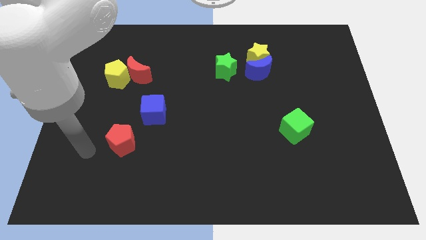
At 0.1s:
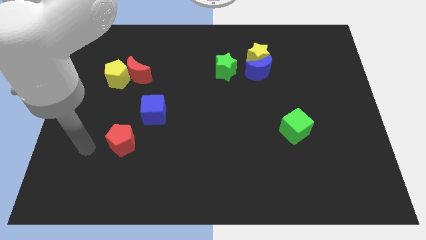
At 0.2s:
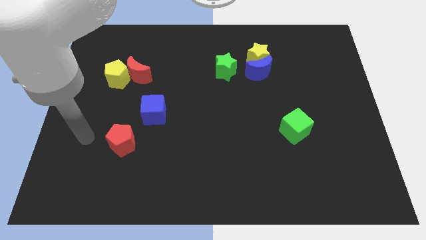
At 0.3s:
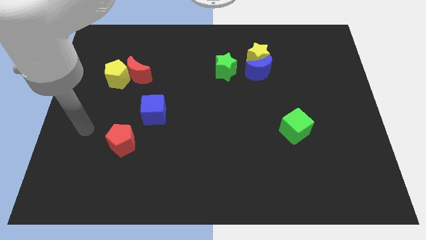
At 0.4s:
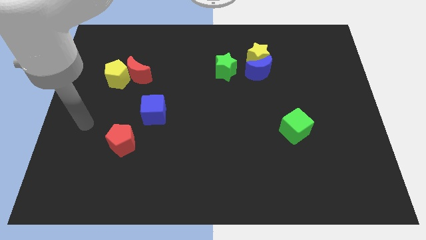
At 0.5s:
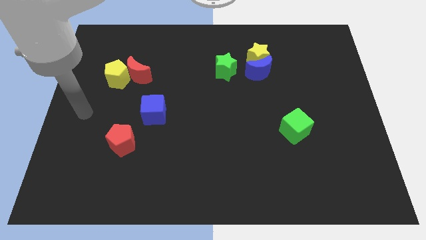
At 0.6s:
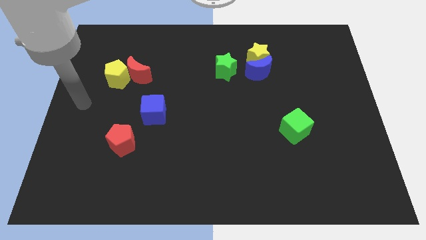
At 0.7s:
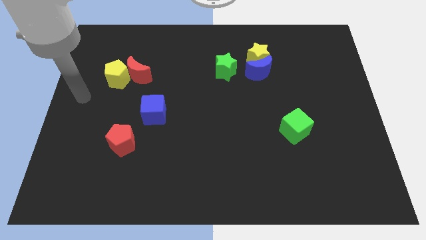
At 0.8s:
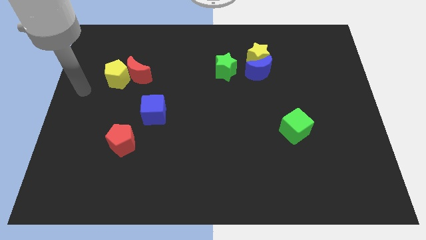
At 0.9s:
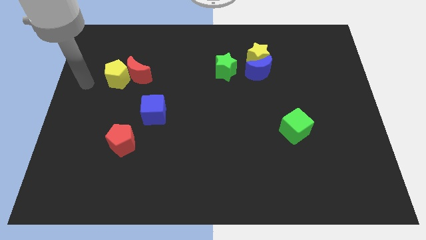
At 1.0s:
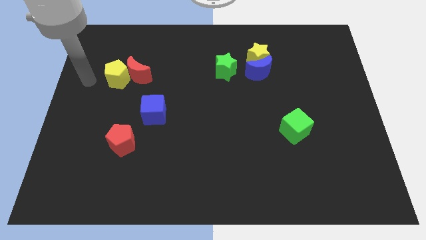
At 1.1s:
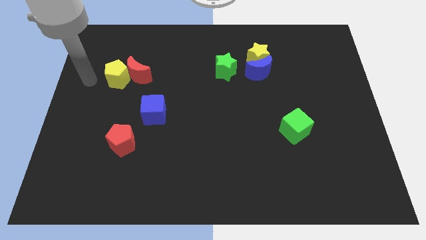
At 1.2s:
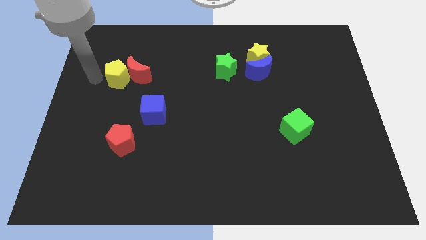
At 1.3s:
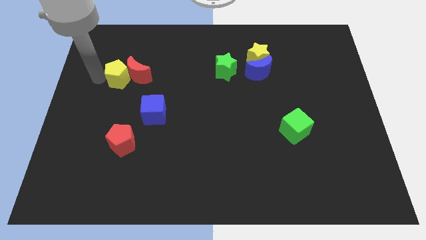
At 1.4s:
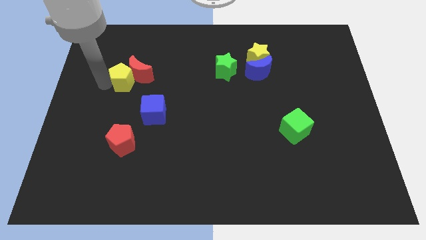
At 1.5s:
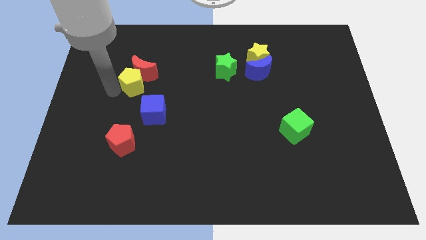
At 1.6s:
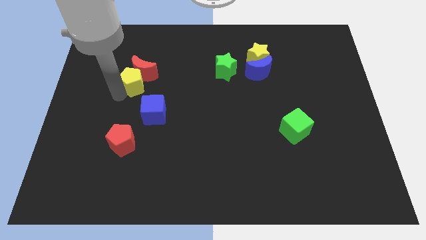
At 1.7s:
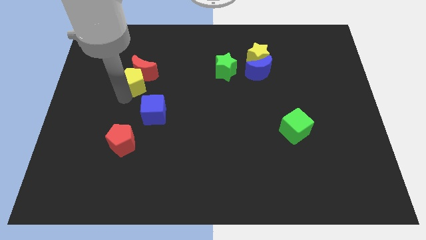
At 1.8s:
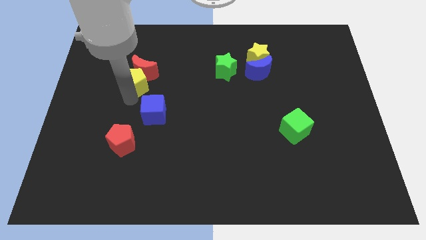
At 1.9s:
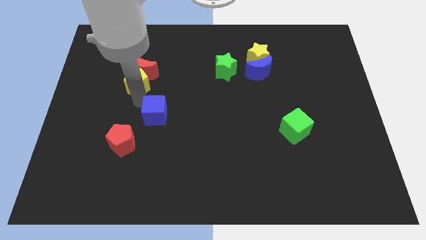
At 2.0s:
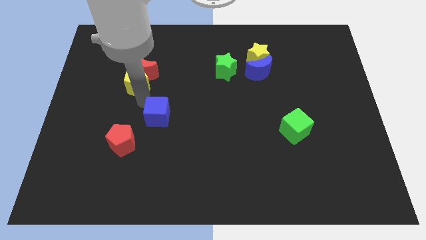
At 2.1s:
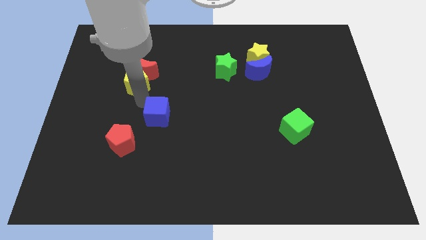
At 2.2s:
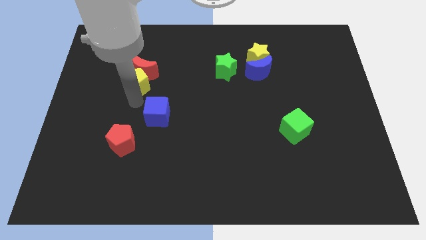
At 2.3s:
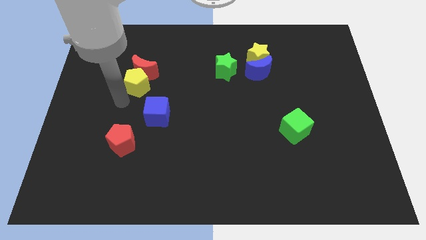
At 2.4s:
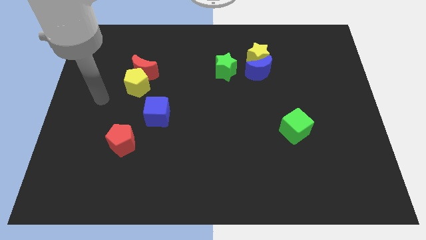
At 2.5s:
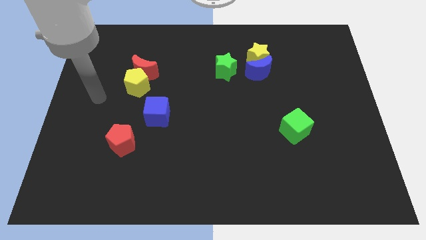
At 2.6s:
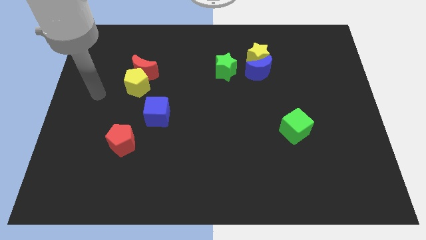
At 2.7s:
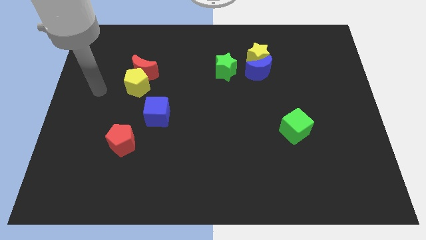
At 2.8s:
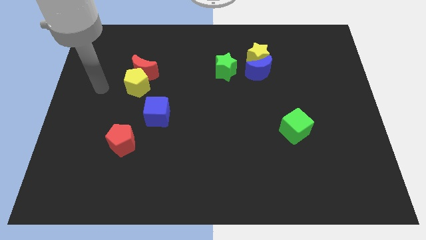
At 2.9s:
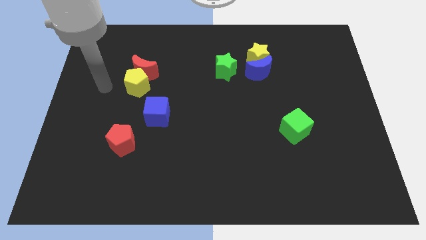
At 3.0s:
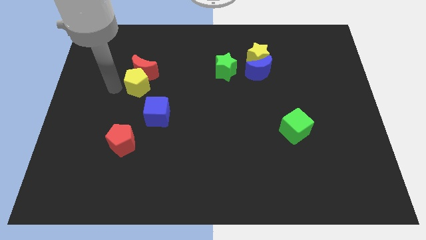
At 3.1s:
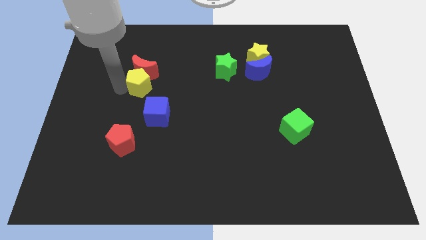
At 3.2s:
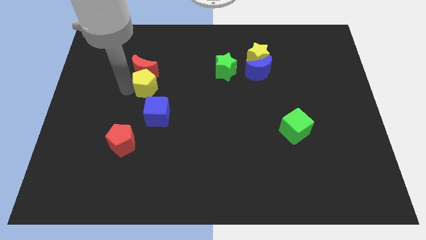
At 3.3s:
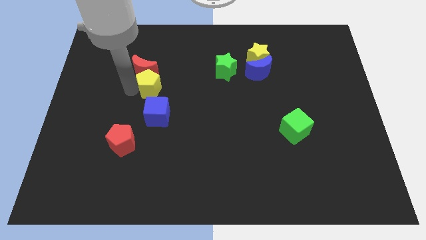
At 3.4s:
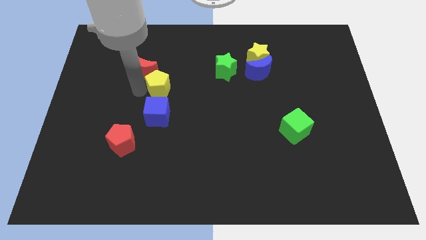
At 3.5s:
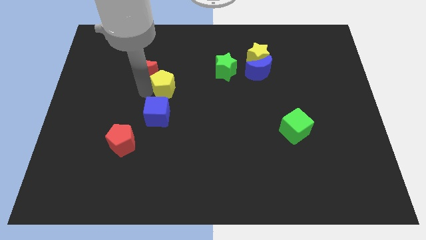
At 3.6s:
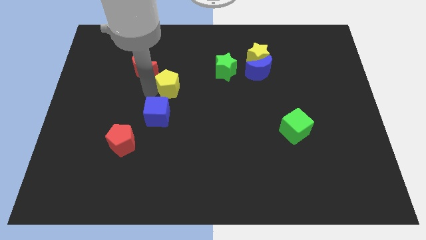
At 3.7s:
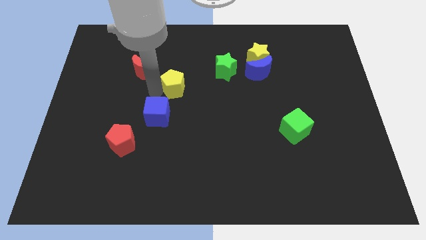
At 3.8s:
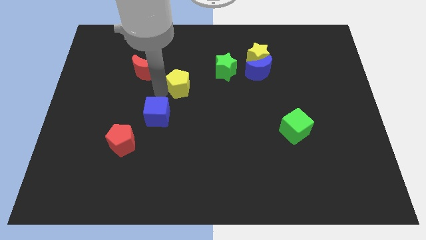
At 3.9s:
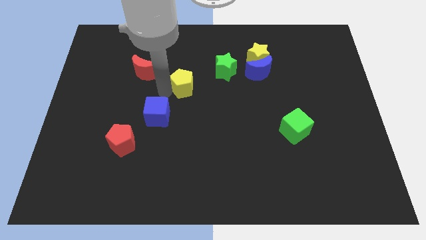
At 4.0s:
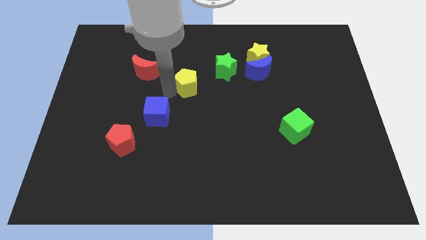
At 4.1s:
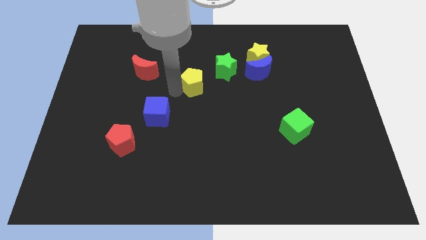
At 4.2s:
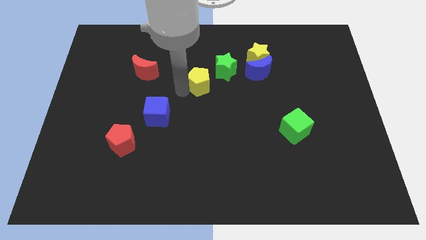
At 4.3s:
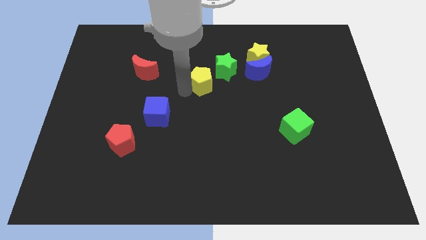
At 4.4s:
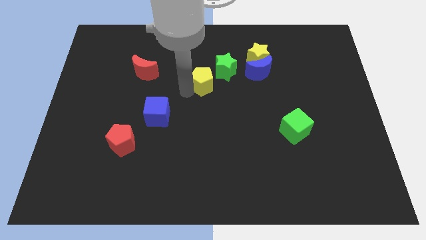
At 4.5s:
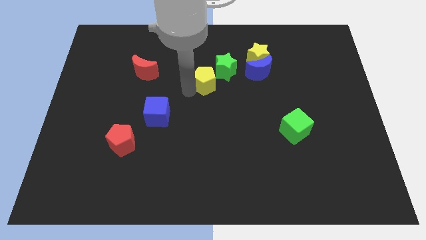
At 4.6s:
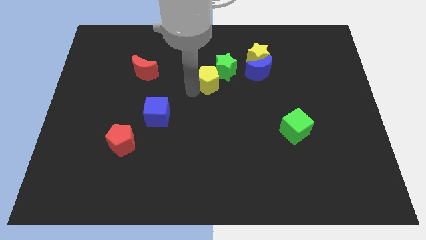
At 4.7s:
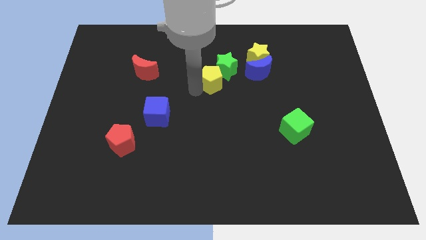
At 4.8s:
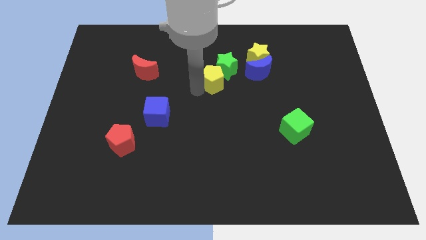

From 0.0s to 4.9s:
put the yellow pentagon towards the green star

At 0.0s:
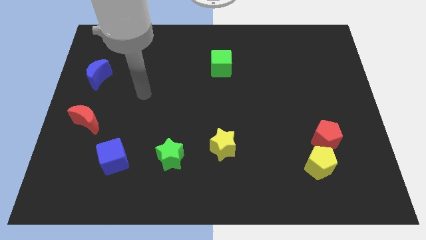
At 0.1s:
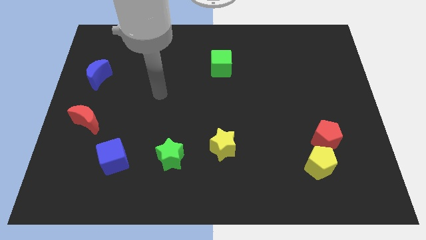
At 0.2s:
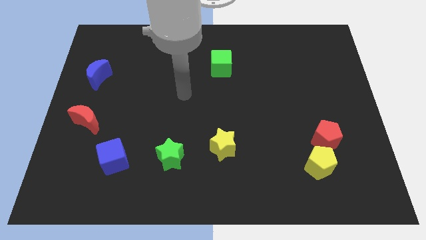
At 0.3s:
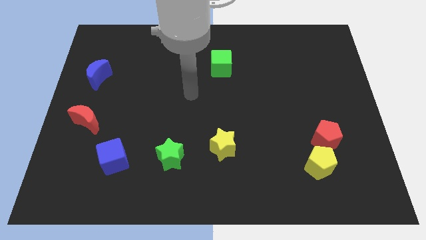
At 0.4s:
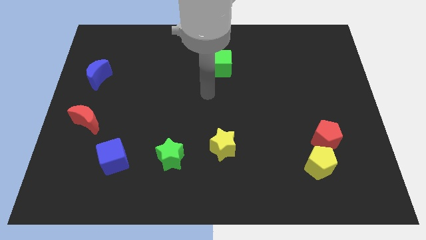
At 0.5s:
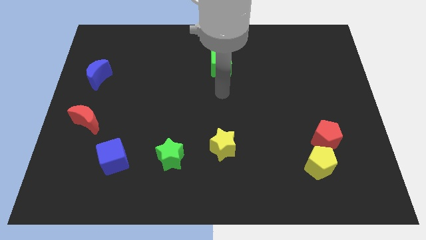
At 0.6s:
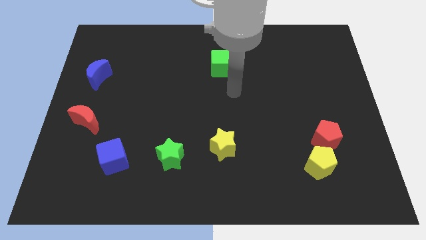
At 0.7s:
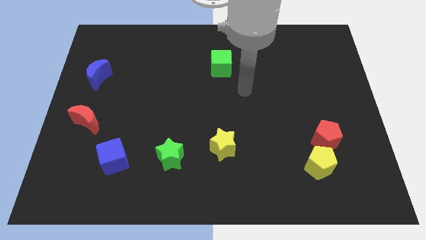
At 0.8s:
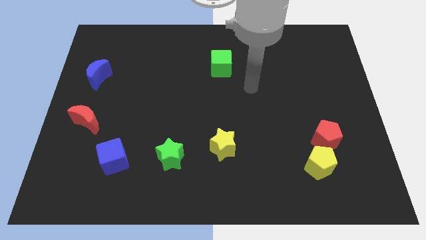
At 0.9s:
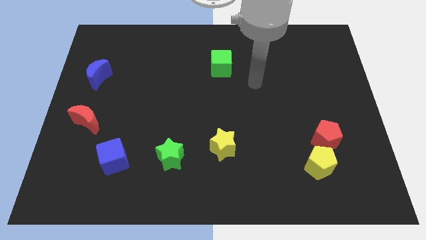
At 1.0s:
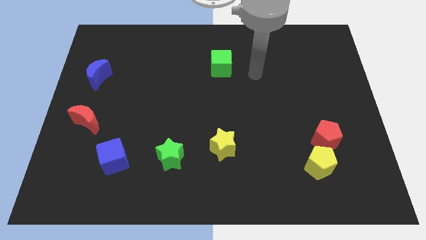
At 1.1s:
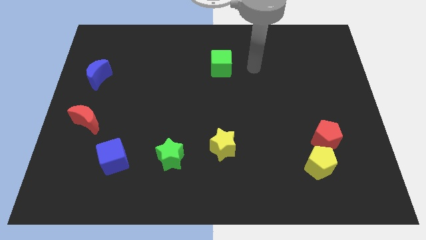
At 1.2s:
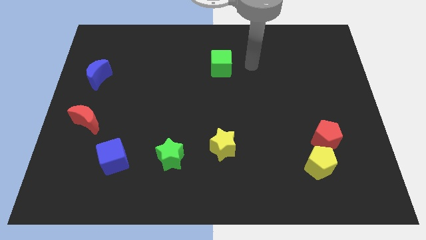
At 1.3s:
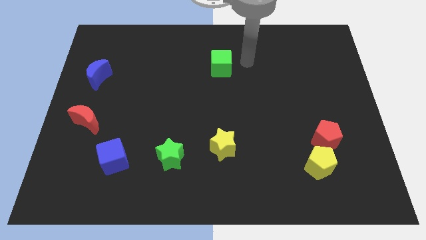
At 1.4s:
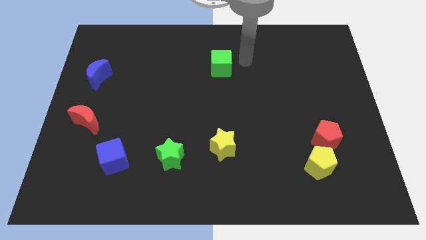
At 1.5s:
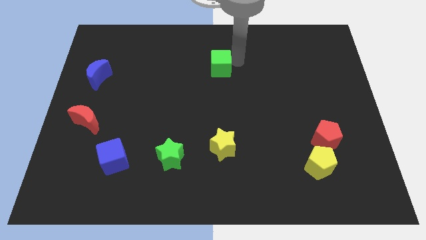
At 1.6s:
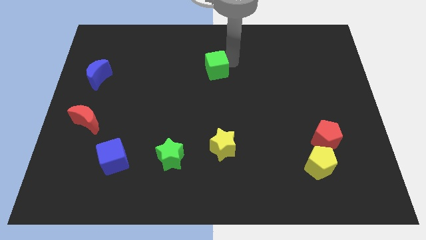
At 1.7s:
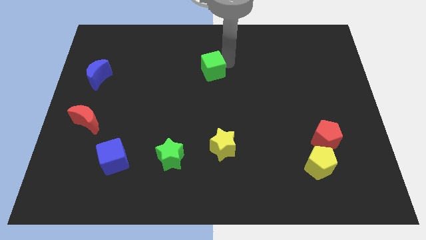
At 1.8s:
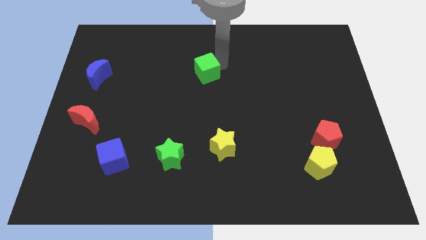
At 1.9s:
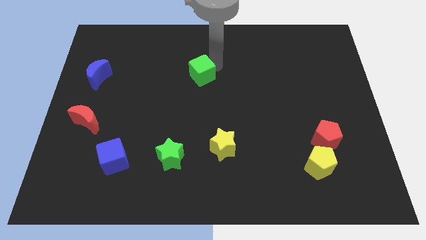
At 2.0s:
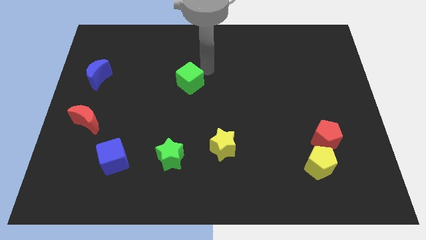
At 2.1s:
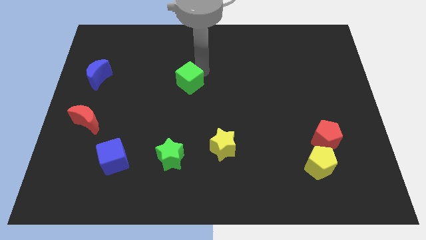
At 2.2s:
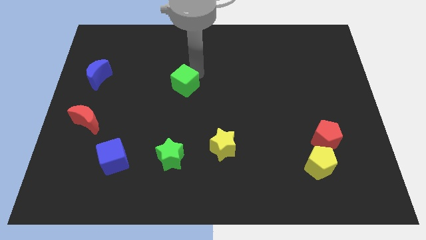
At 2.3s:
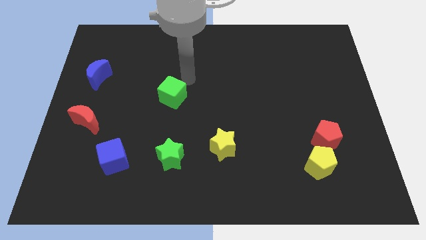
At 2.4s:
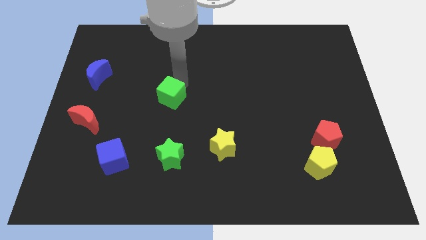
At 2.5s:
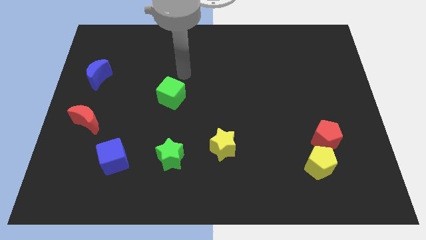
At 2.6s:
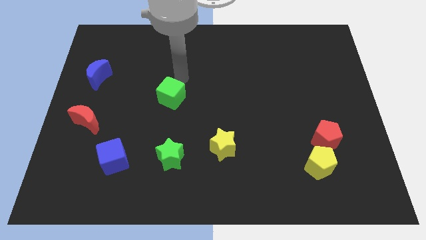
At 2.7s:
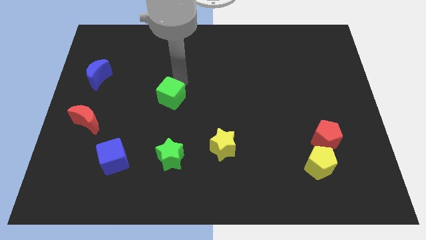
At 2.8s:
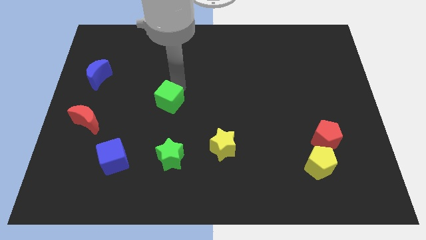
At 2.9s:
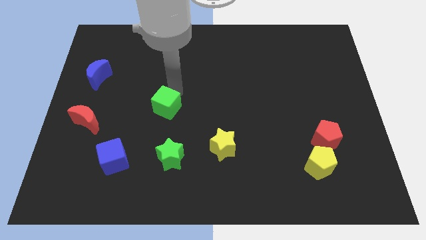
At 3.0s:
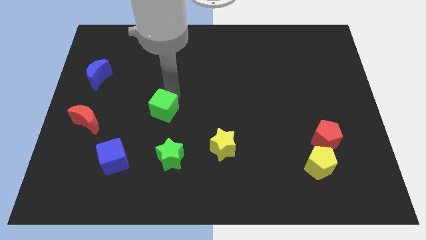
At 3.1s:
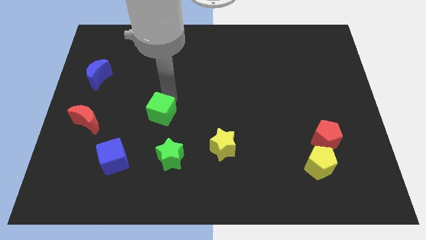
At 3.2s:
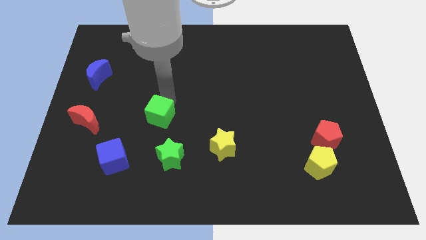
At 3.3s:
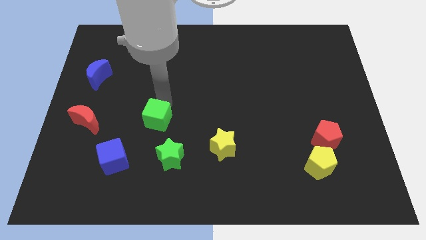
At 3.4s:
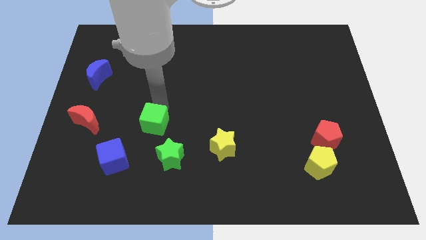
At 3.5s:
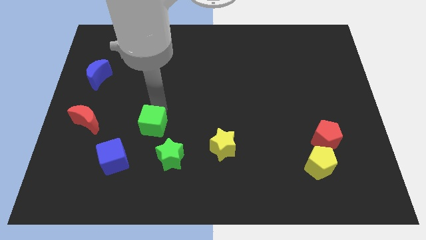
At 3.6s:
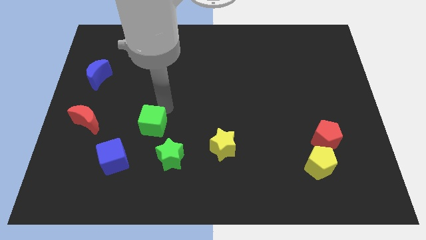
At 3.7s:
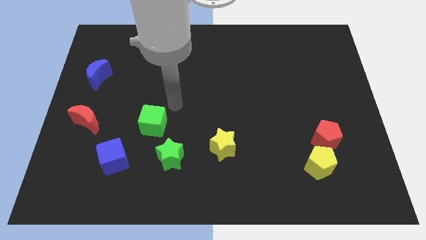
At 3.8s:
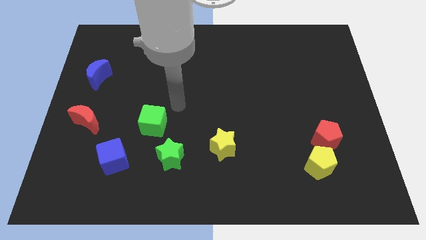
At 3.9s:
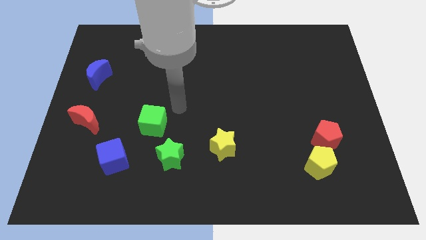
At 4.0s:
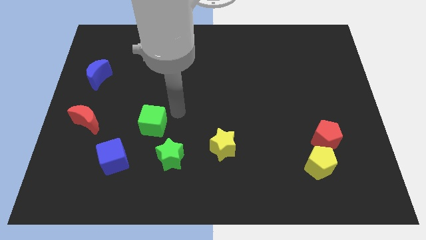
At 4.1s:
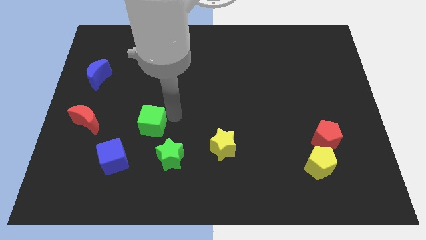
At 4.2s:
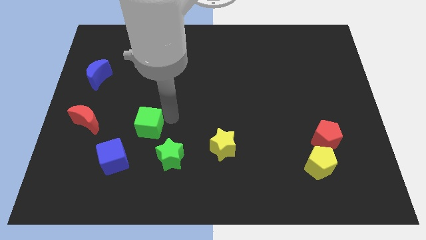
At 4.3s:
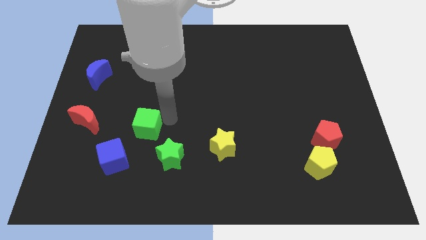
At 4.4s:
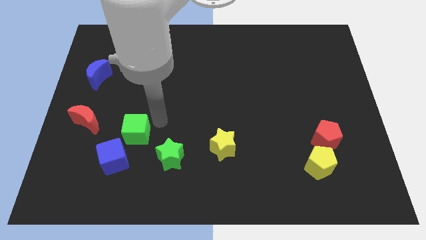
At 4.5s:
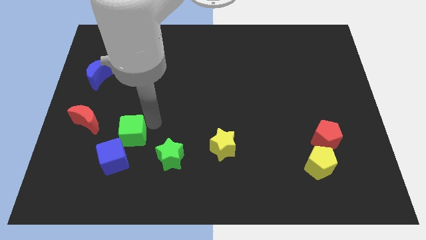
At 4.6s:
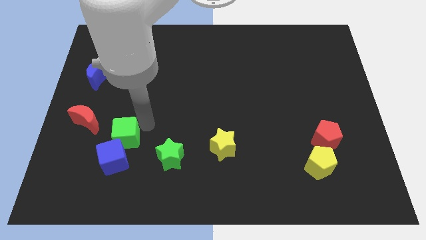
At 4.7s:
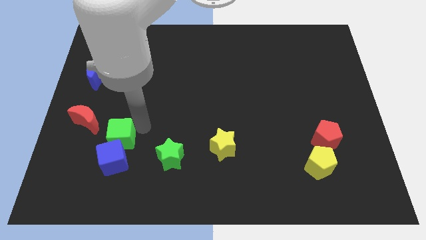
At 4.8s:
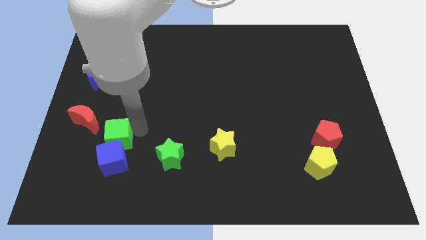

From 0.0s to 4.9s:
push the green cube close to the blue cube
